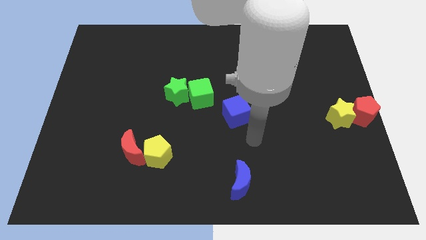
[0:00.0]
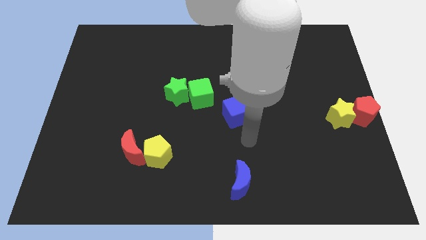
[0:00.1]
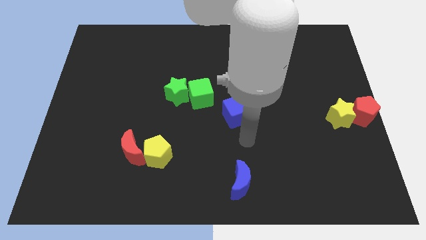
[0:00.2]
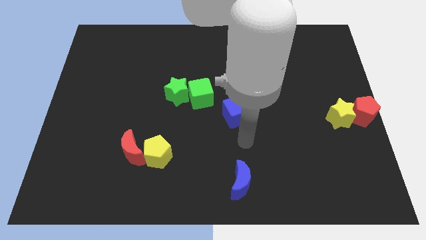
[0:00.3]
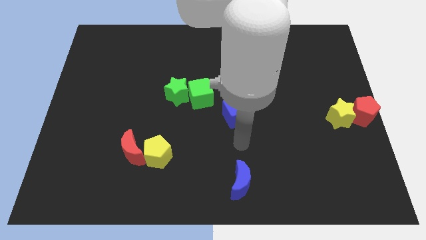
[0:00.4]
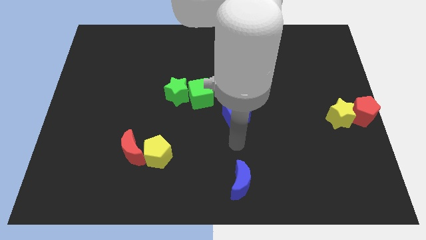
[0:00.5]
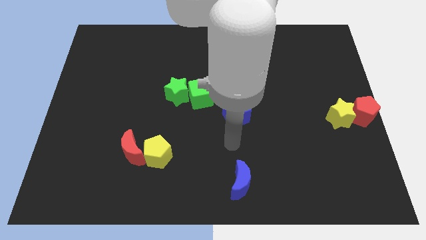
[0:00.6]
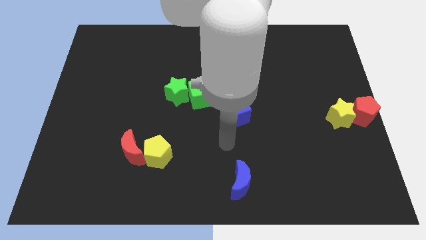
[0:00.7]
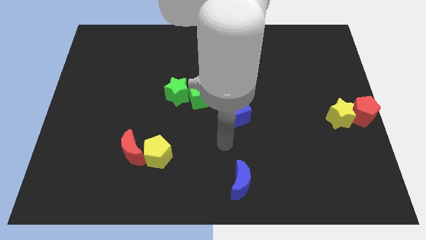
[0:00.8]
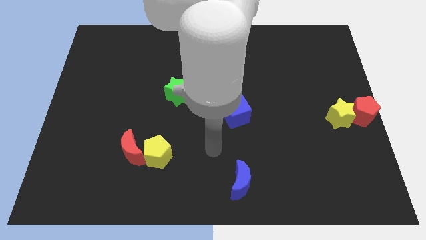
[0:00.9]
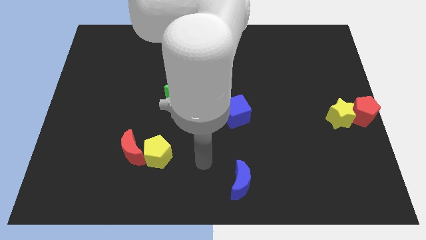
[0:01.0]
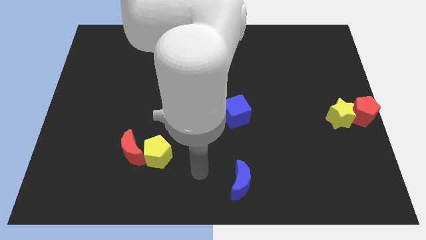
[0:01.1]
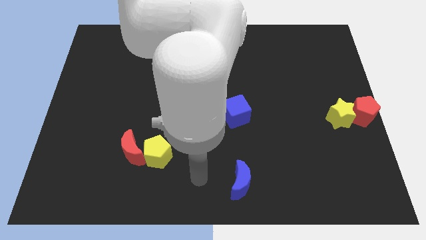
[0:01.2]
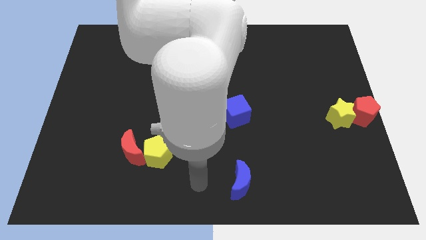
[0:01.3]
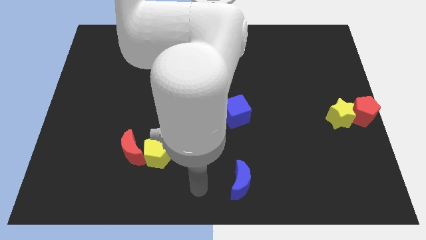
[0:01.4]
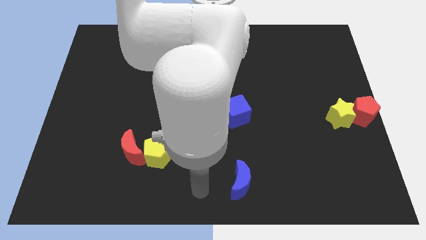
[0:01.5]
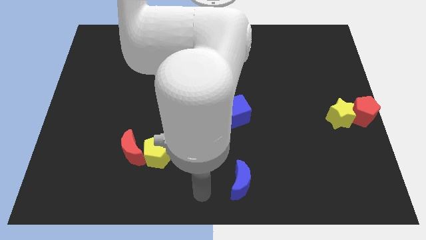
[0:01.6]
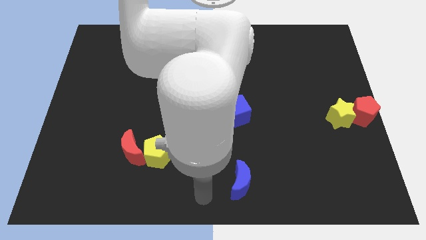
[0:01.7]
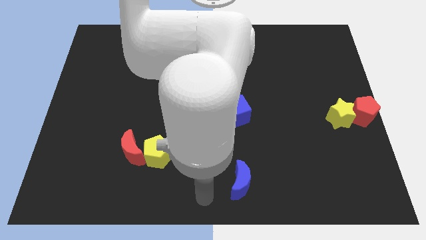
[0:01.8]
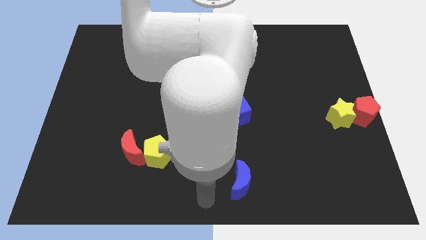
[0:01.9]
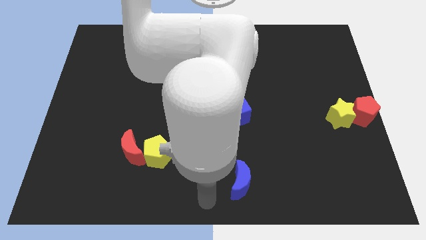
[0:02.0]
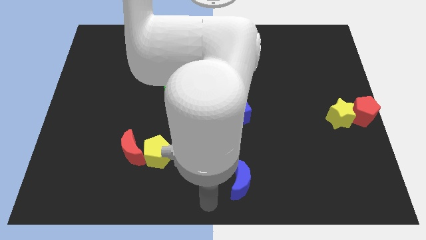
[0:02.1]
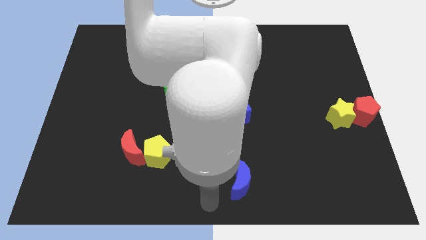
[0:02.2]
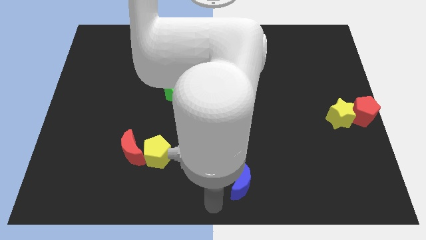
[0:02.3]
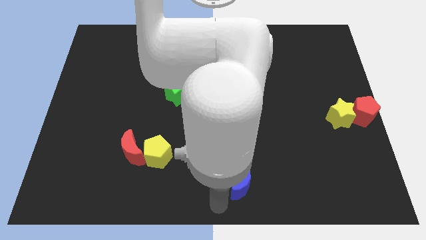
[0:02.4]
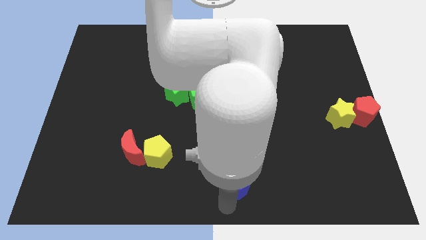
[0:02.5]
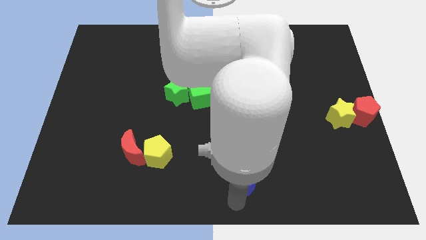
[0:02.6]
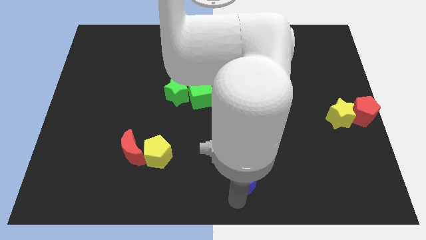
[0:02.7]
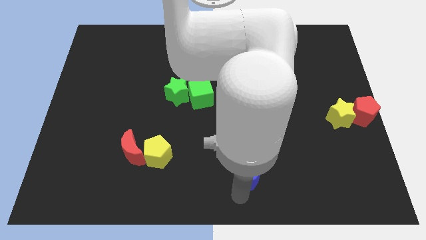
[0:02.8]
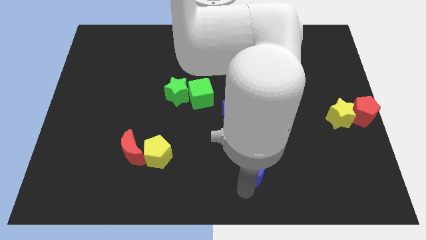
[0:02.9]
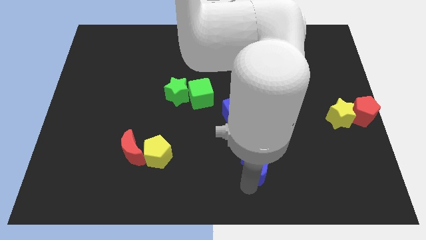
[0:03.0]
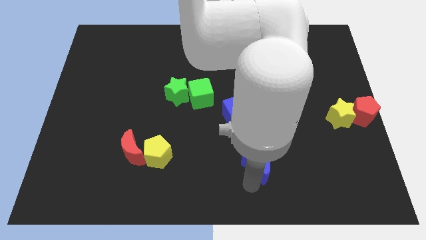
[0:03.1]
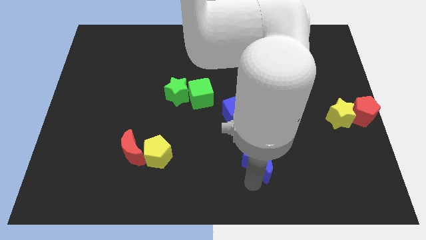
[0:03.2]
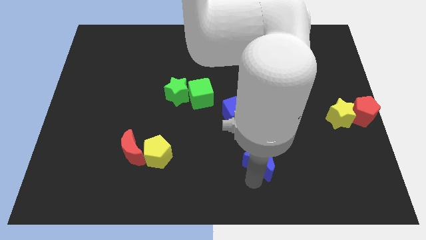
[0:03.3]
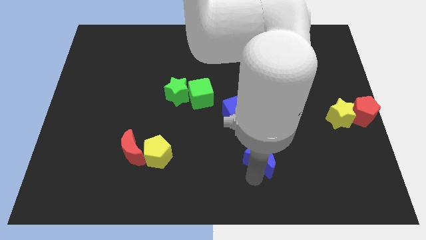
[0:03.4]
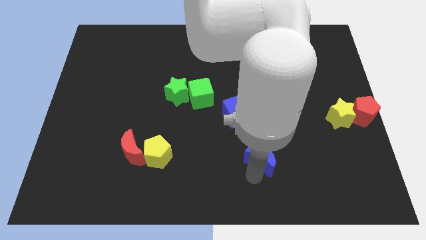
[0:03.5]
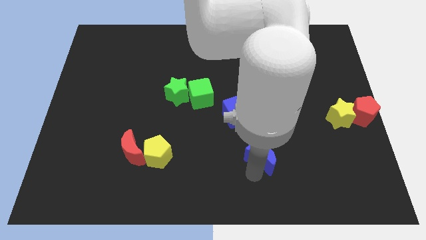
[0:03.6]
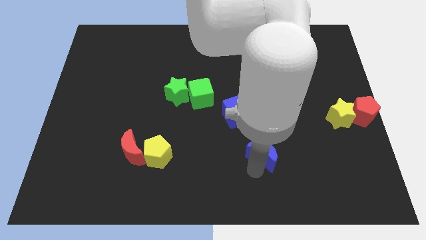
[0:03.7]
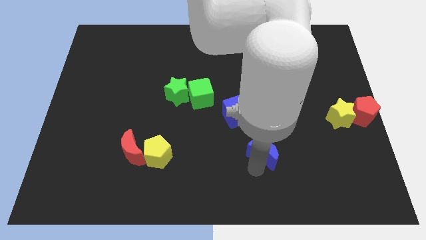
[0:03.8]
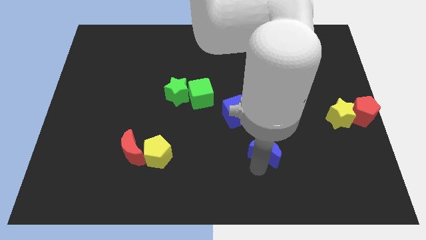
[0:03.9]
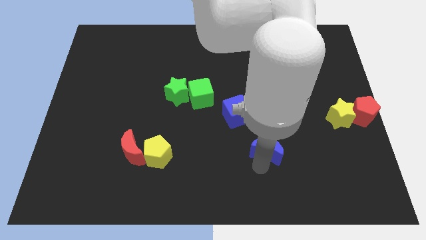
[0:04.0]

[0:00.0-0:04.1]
push the blue crescent to the right of the yellow pentagon

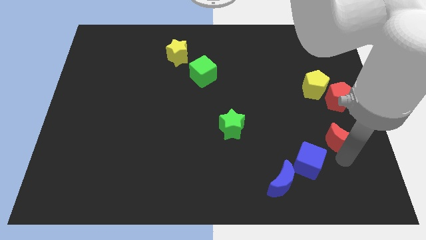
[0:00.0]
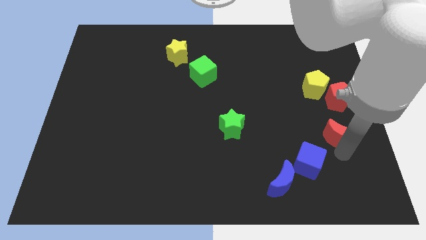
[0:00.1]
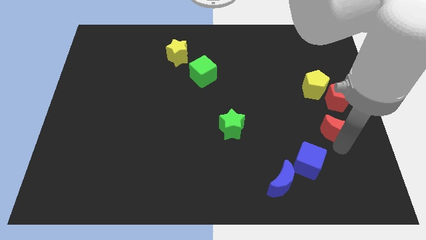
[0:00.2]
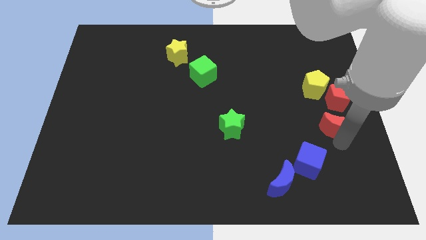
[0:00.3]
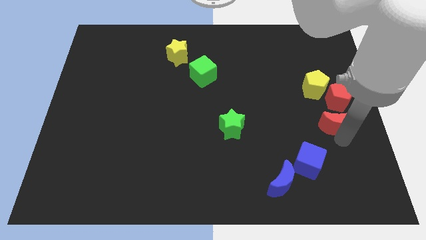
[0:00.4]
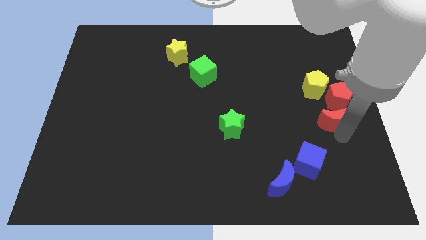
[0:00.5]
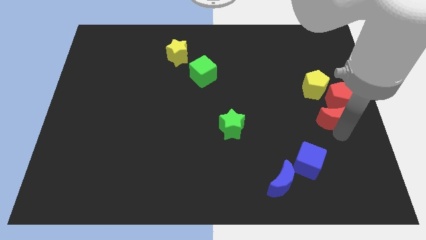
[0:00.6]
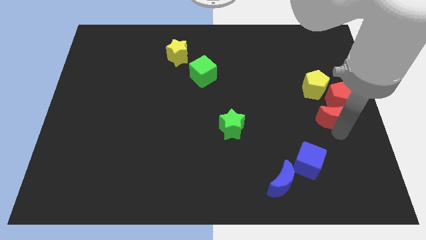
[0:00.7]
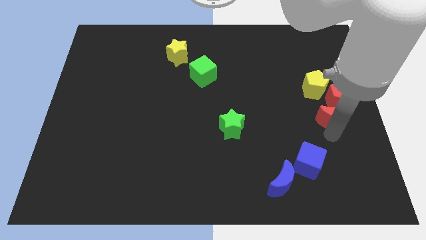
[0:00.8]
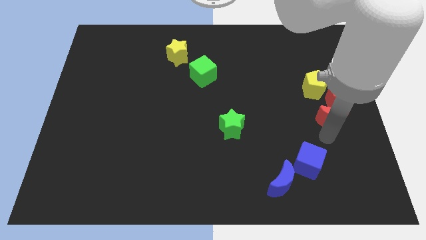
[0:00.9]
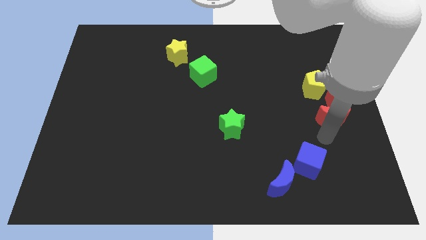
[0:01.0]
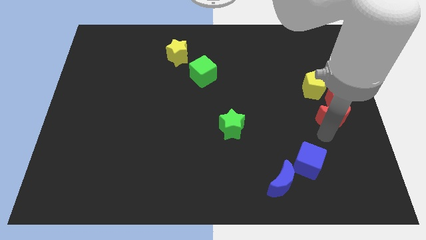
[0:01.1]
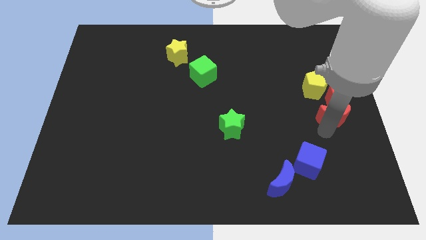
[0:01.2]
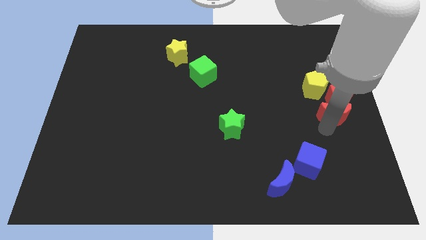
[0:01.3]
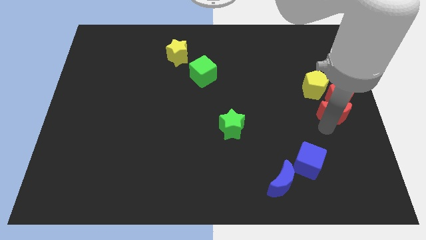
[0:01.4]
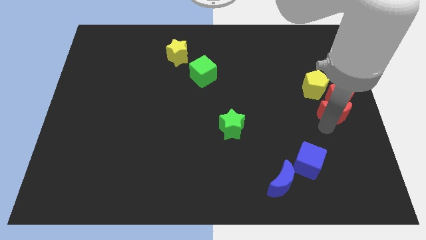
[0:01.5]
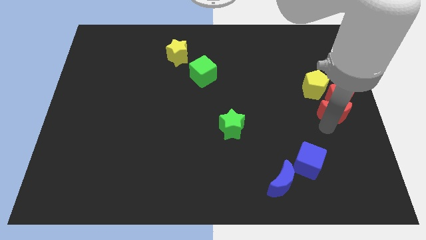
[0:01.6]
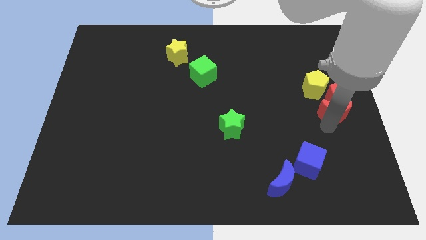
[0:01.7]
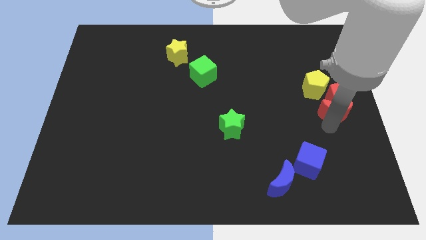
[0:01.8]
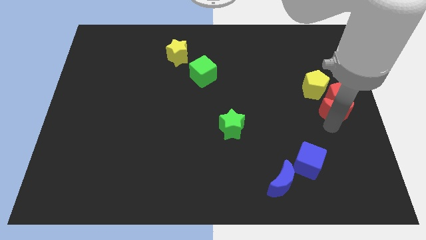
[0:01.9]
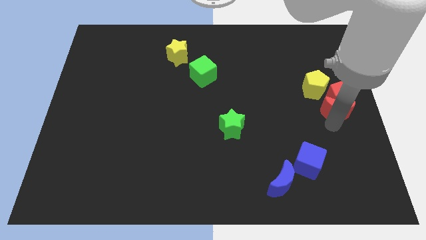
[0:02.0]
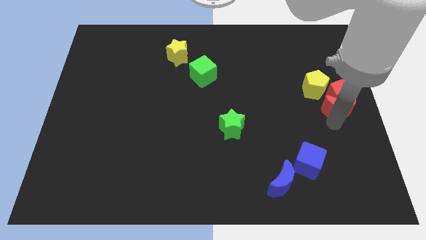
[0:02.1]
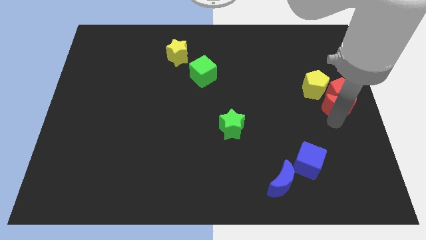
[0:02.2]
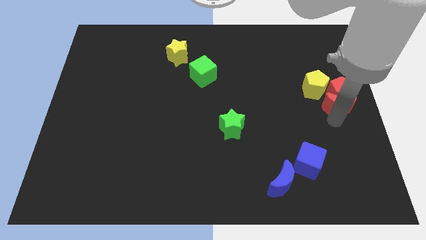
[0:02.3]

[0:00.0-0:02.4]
push the red half moon towards red pentagan

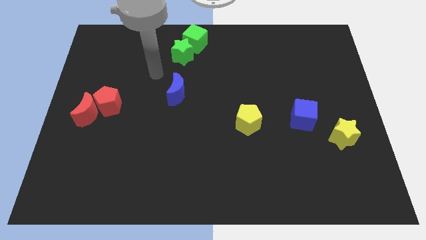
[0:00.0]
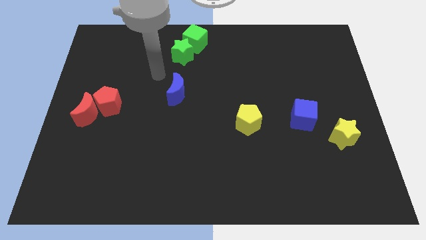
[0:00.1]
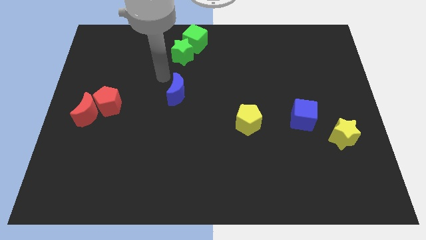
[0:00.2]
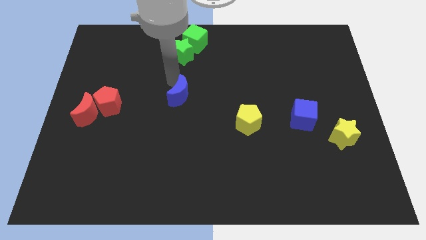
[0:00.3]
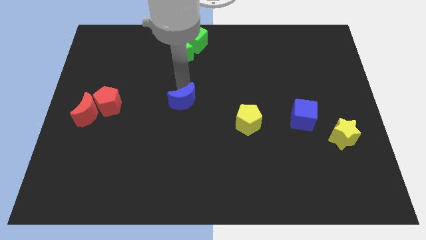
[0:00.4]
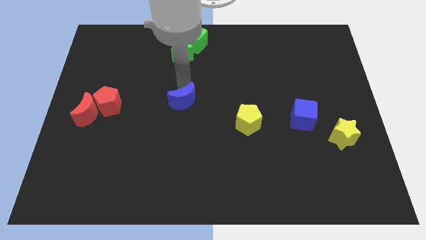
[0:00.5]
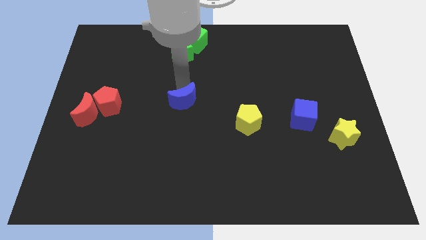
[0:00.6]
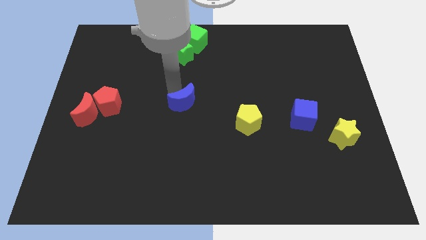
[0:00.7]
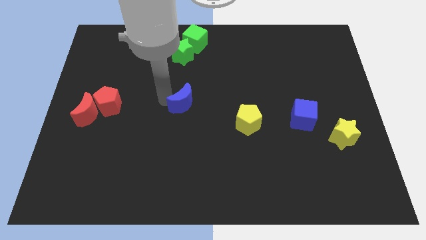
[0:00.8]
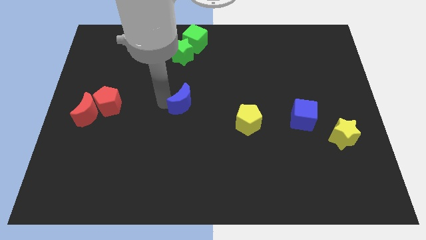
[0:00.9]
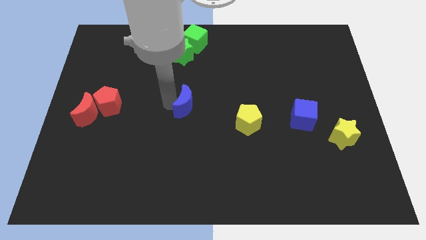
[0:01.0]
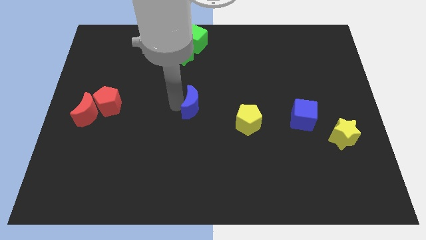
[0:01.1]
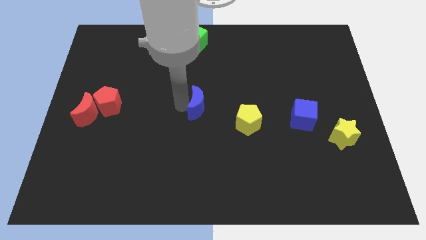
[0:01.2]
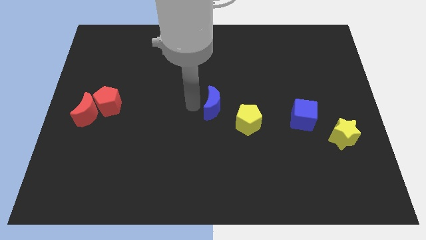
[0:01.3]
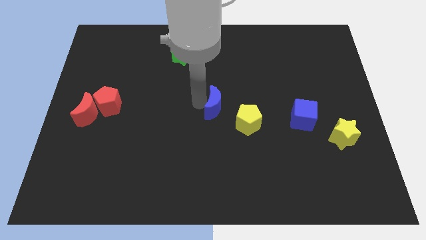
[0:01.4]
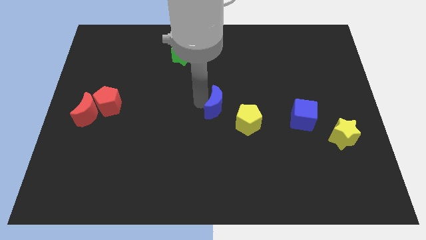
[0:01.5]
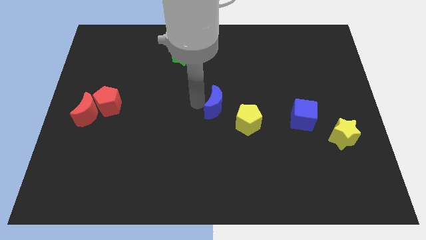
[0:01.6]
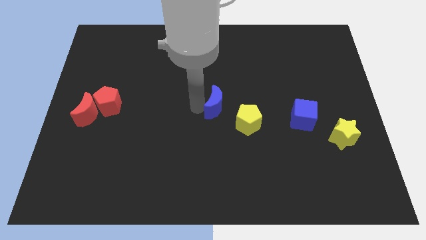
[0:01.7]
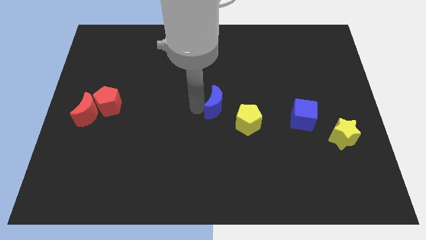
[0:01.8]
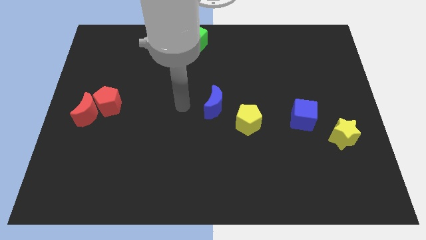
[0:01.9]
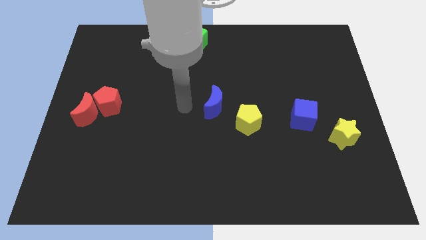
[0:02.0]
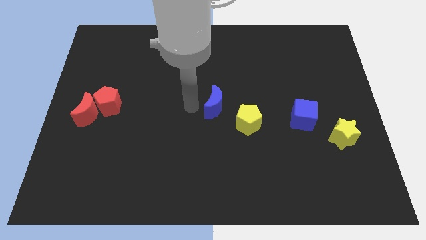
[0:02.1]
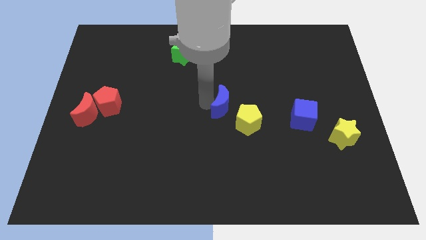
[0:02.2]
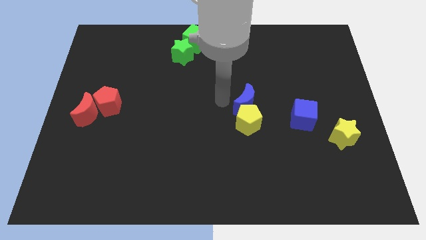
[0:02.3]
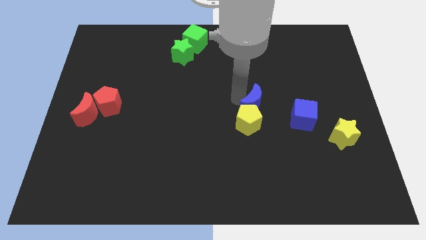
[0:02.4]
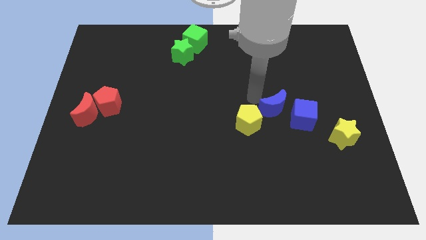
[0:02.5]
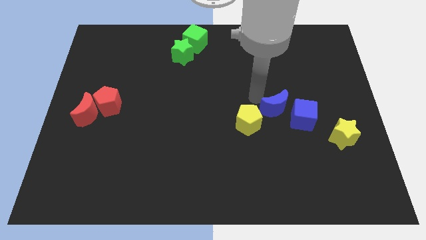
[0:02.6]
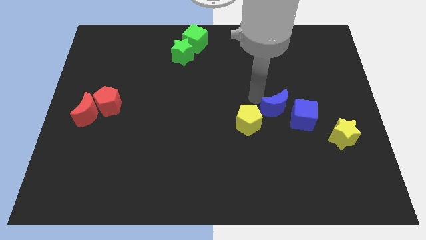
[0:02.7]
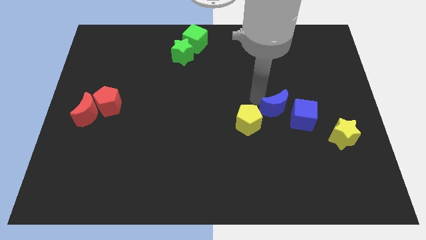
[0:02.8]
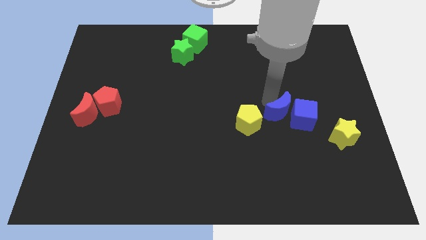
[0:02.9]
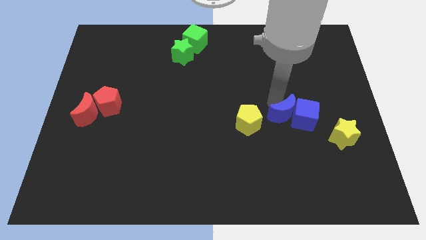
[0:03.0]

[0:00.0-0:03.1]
push blue moon into blue cube
